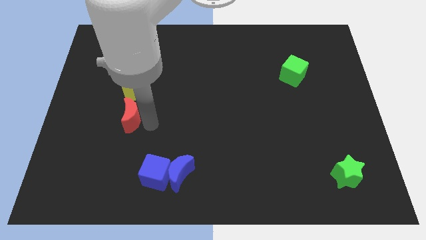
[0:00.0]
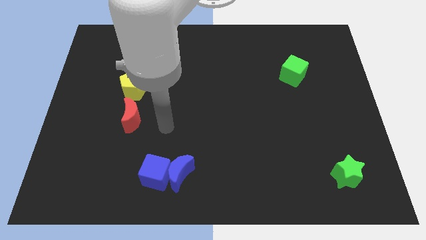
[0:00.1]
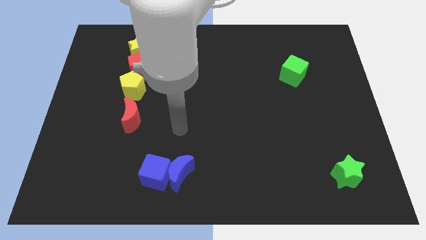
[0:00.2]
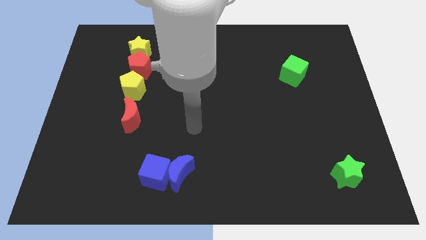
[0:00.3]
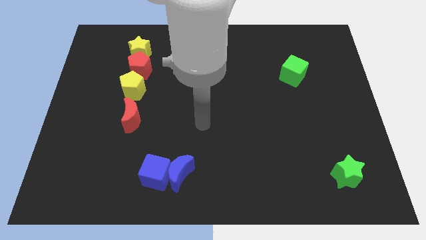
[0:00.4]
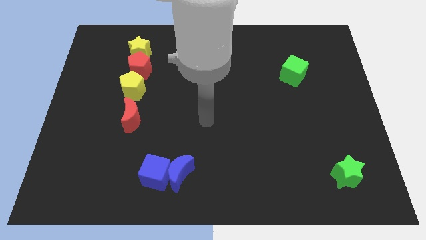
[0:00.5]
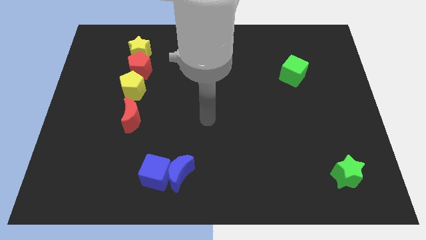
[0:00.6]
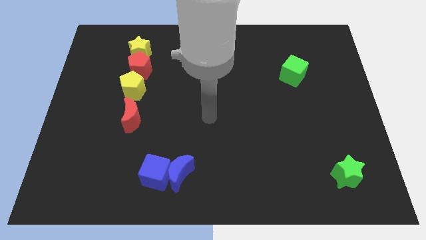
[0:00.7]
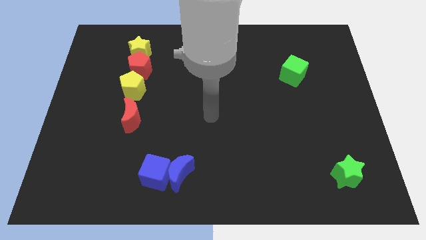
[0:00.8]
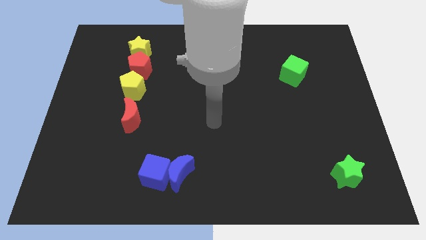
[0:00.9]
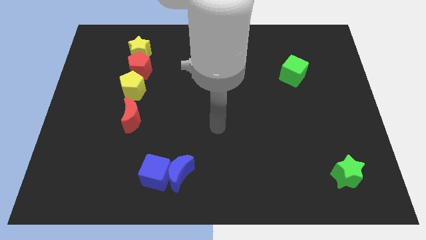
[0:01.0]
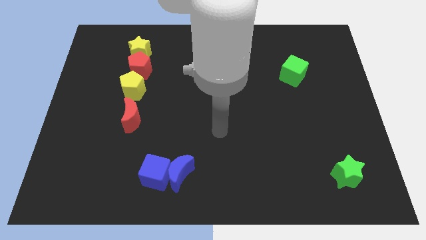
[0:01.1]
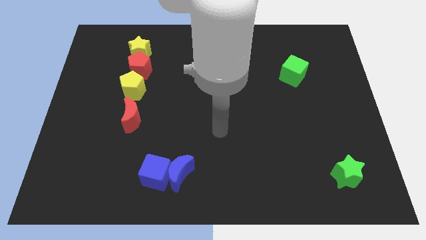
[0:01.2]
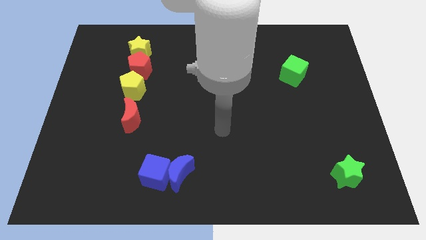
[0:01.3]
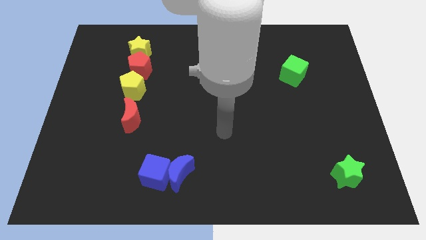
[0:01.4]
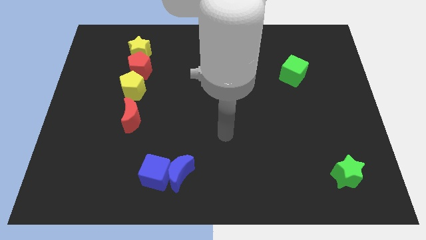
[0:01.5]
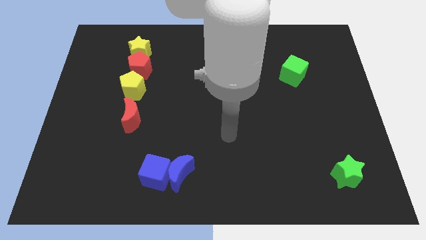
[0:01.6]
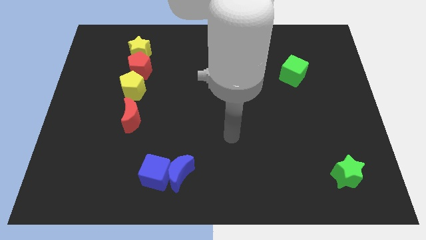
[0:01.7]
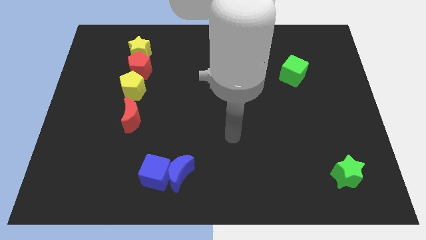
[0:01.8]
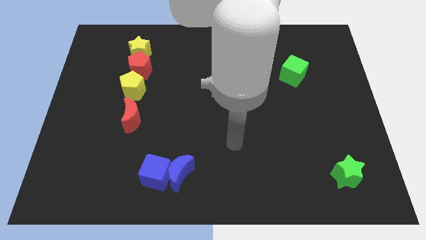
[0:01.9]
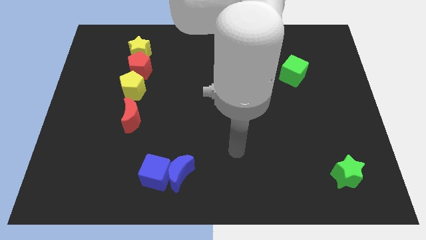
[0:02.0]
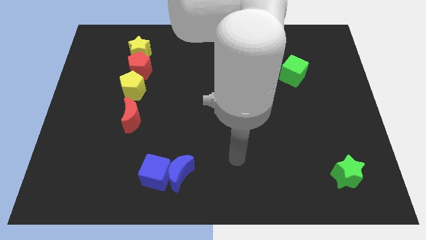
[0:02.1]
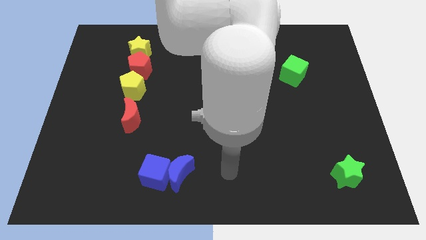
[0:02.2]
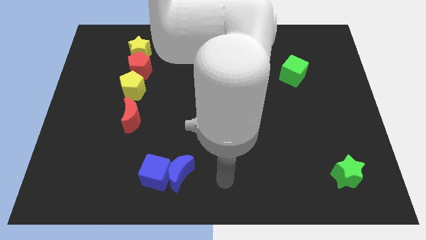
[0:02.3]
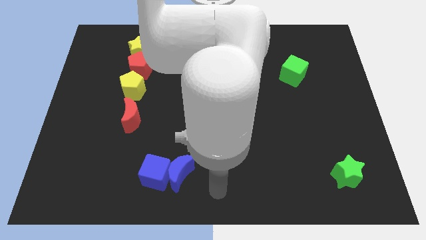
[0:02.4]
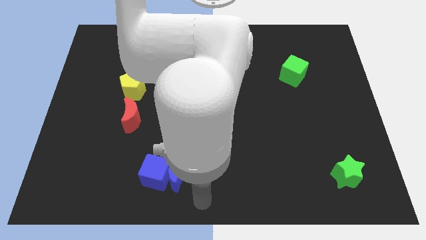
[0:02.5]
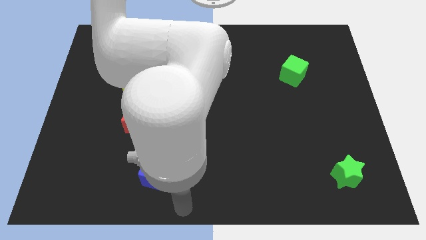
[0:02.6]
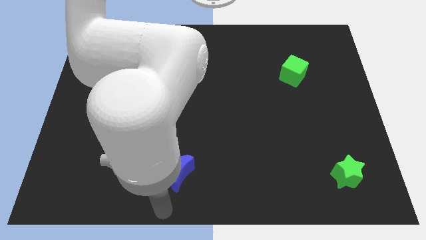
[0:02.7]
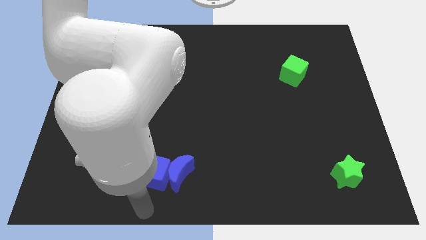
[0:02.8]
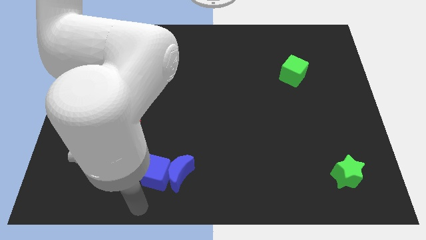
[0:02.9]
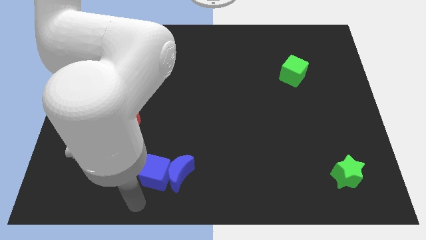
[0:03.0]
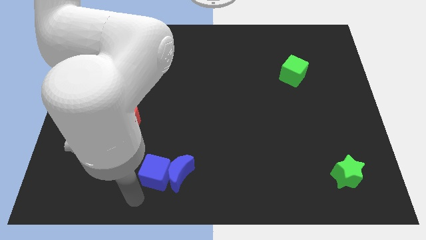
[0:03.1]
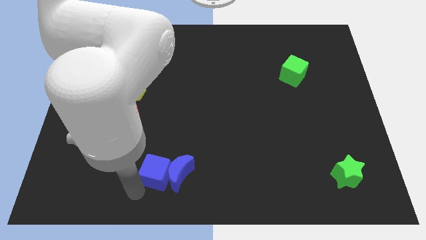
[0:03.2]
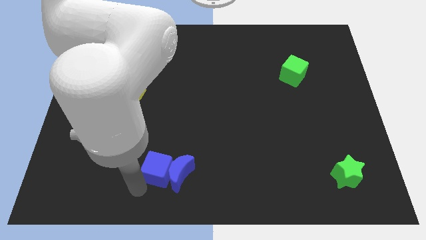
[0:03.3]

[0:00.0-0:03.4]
move your arm to the bottom of blue cube

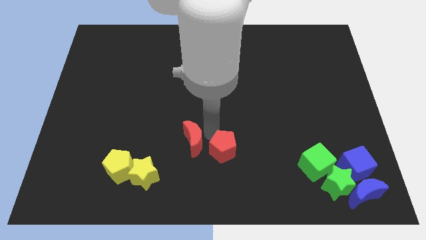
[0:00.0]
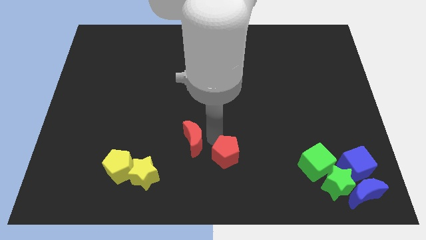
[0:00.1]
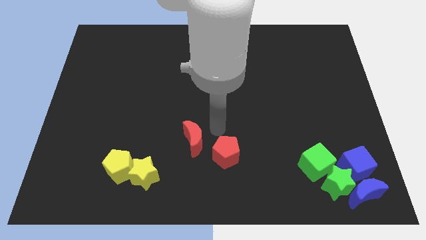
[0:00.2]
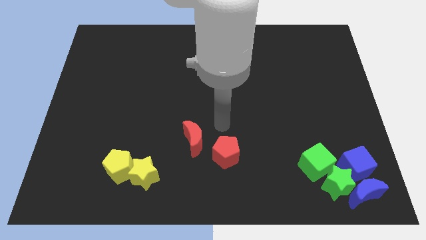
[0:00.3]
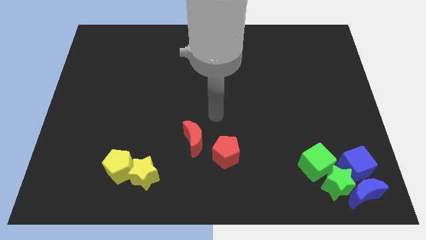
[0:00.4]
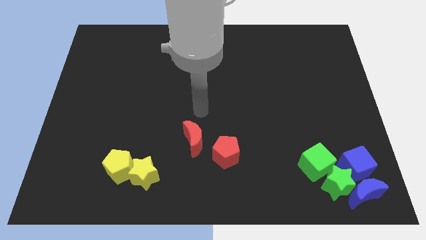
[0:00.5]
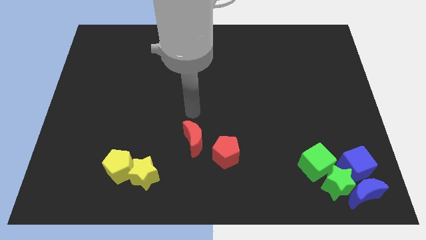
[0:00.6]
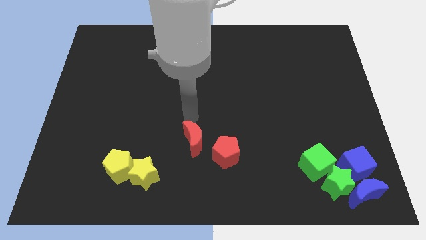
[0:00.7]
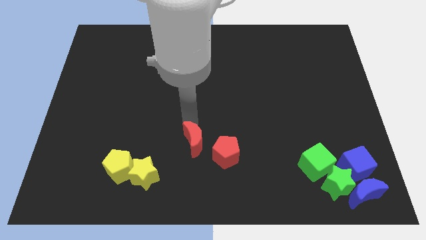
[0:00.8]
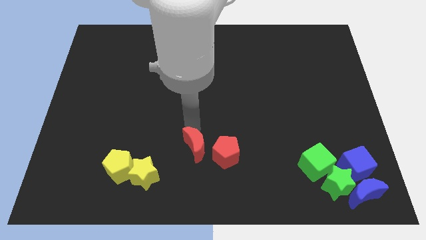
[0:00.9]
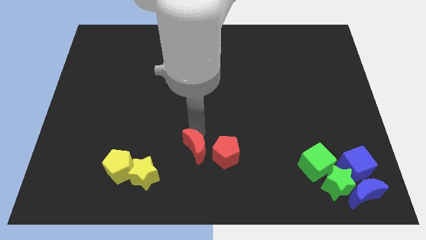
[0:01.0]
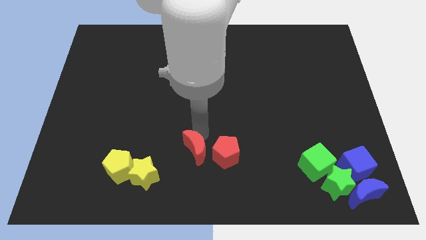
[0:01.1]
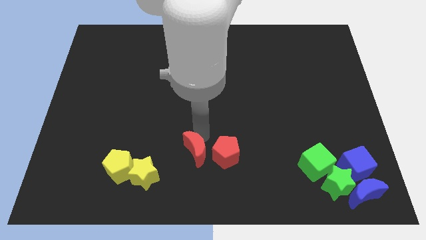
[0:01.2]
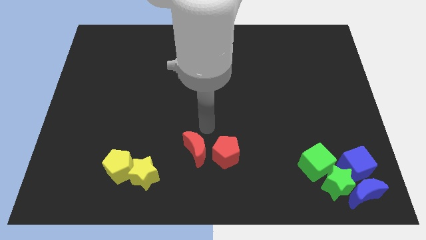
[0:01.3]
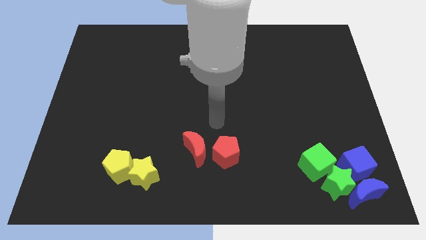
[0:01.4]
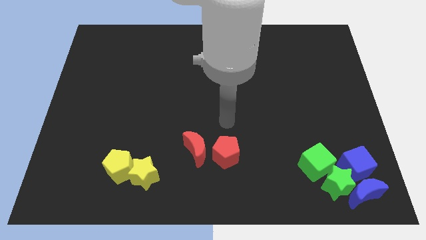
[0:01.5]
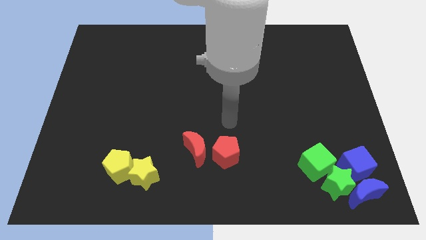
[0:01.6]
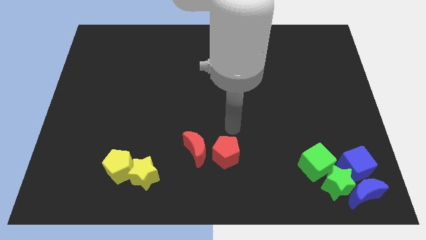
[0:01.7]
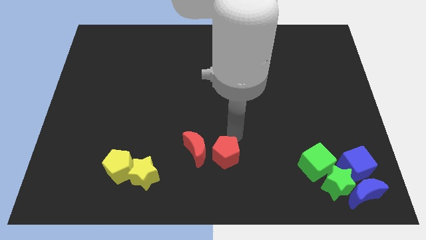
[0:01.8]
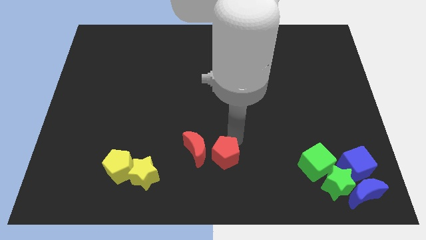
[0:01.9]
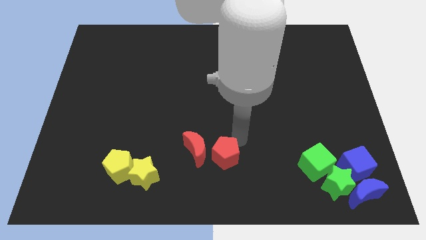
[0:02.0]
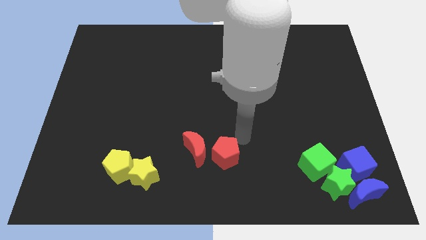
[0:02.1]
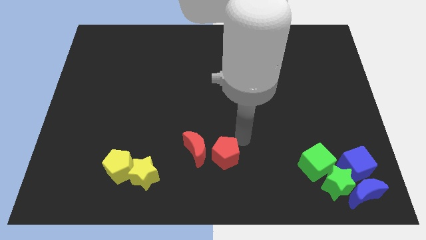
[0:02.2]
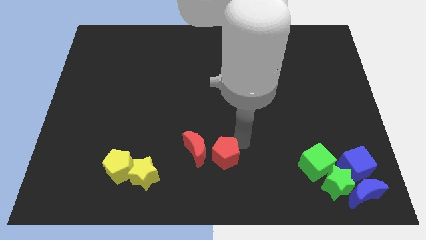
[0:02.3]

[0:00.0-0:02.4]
push the red moon downward

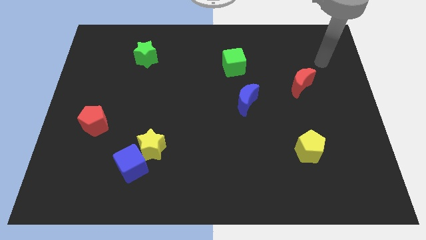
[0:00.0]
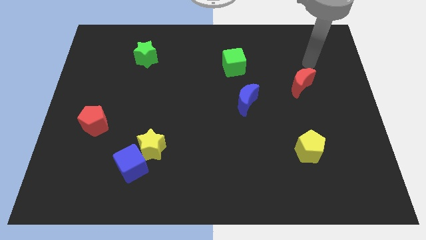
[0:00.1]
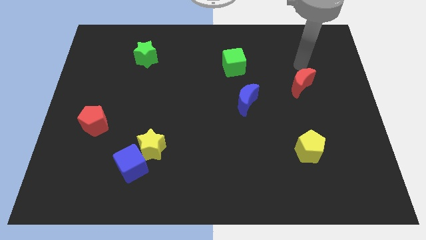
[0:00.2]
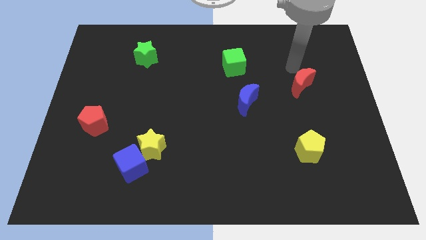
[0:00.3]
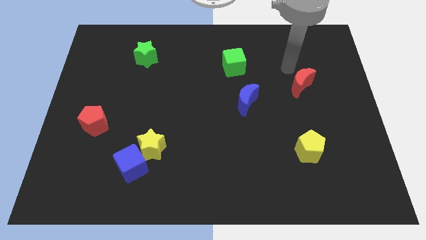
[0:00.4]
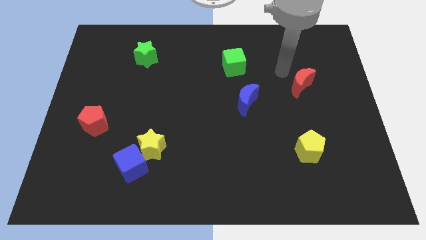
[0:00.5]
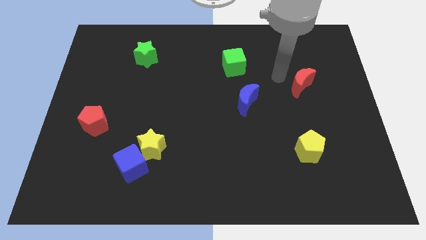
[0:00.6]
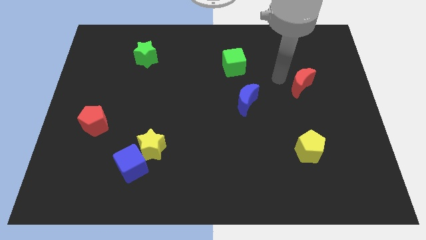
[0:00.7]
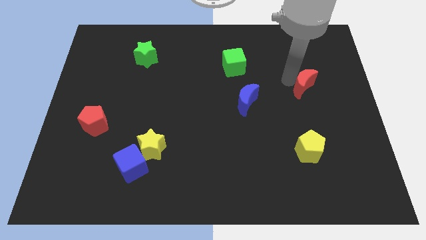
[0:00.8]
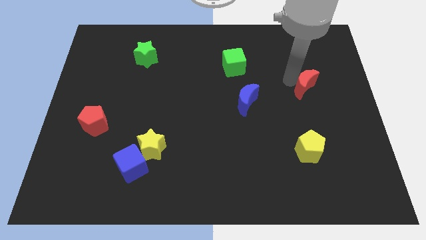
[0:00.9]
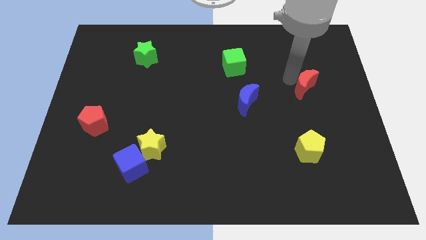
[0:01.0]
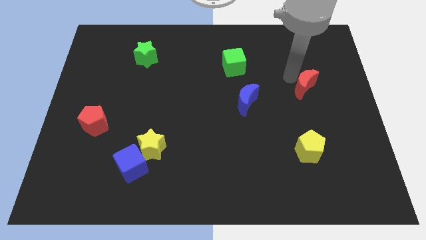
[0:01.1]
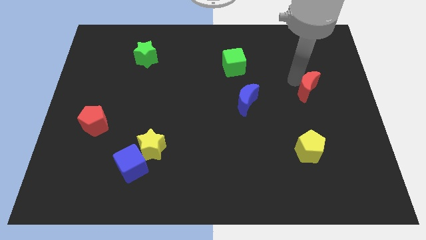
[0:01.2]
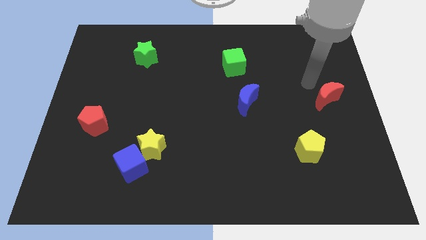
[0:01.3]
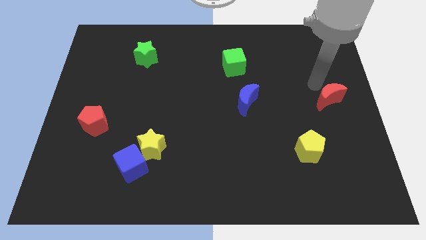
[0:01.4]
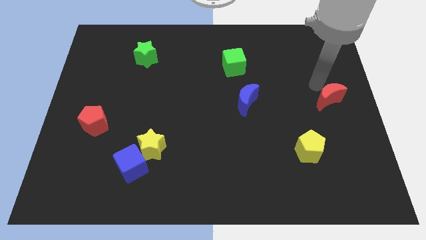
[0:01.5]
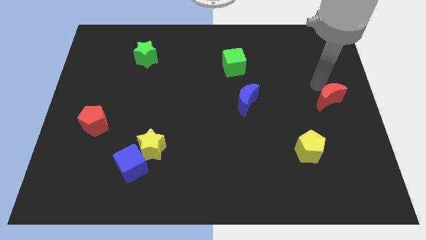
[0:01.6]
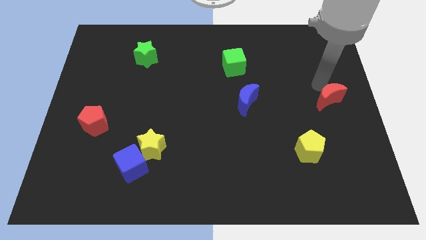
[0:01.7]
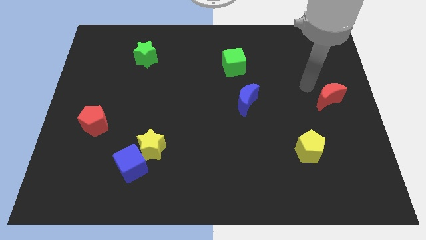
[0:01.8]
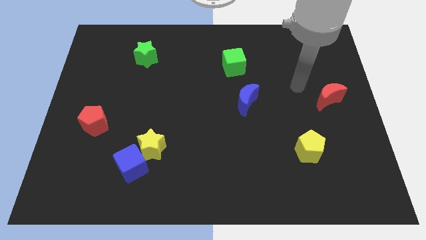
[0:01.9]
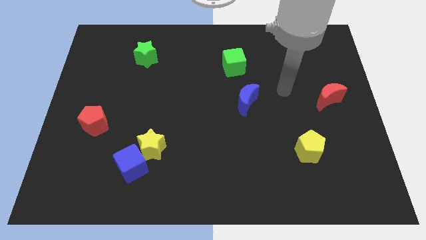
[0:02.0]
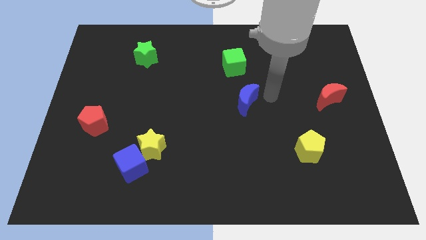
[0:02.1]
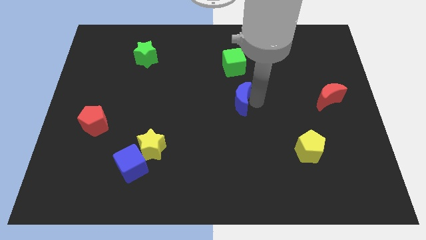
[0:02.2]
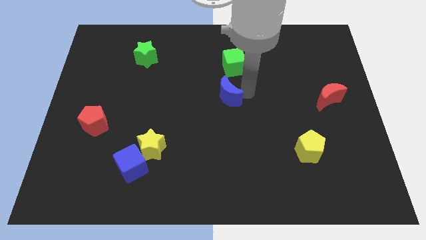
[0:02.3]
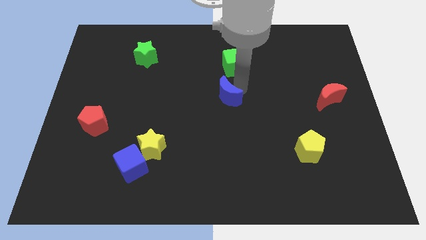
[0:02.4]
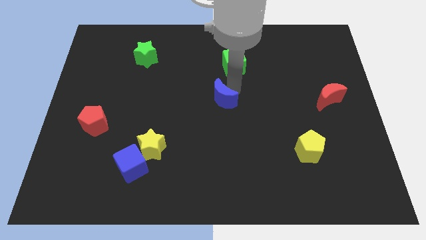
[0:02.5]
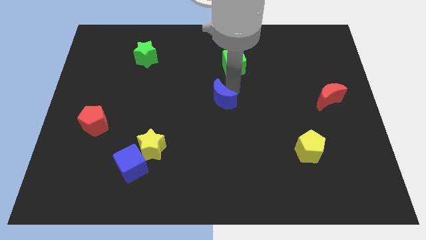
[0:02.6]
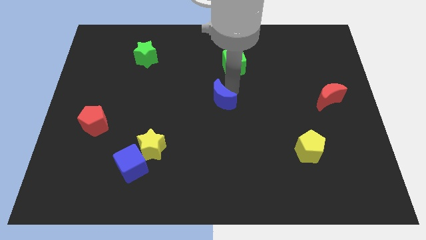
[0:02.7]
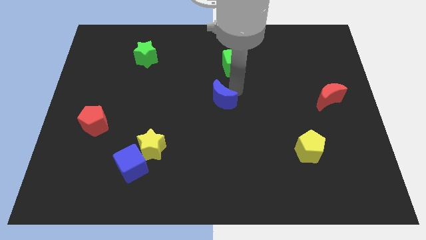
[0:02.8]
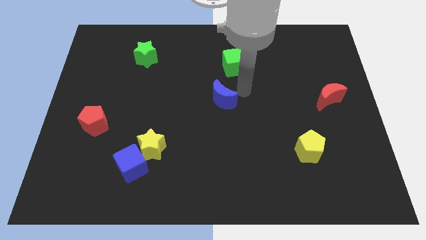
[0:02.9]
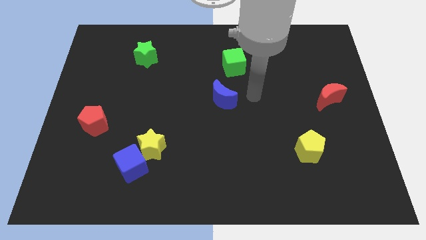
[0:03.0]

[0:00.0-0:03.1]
move blue crescent to the centre of the board
